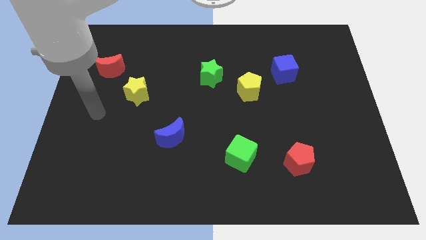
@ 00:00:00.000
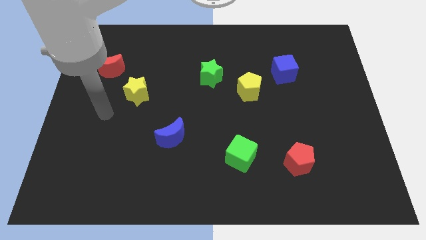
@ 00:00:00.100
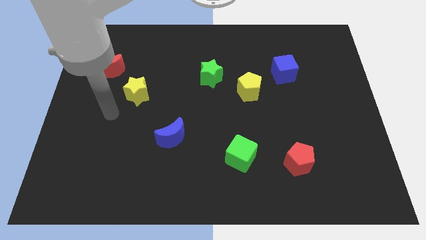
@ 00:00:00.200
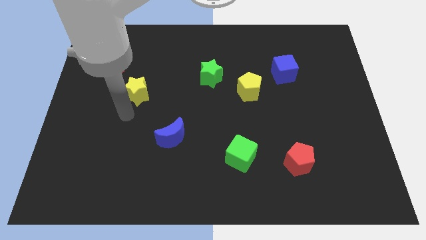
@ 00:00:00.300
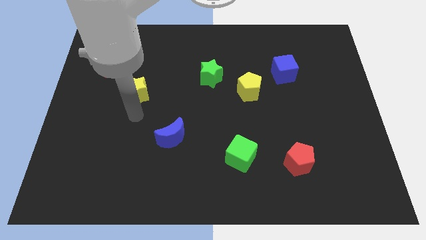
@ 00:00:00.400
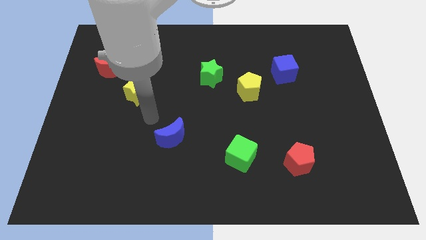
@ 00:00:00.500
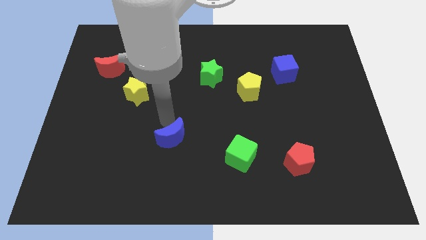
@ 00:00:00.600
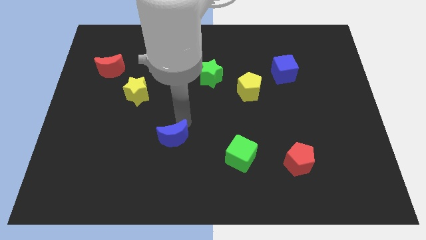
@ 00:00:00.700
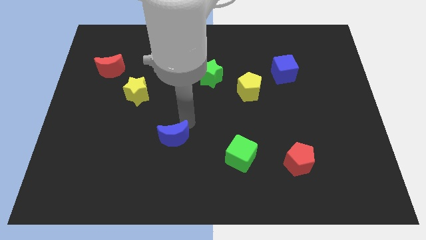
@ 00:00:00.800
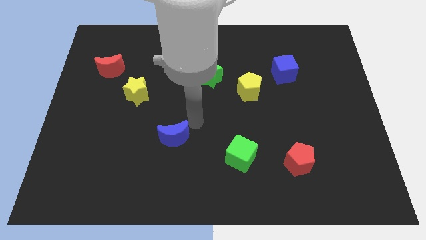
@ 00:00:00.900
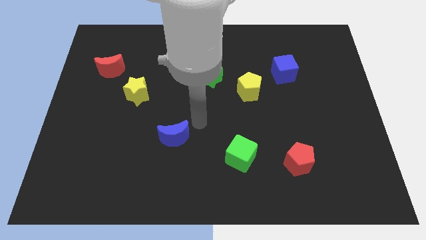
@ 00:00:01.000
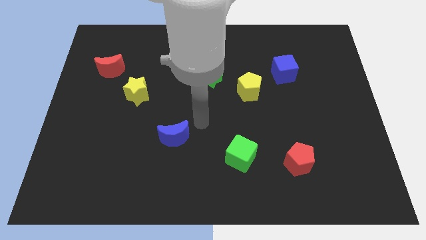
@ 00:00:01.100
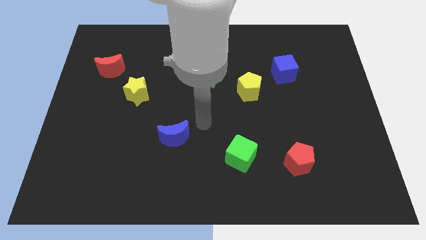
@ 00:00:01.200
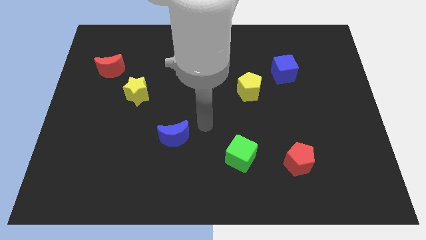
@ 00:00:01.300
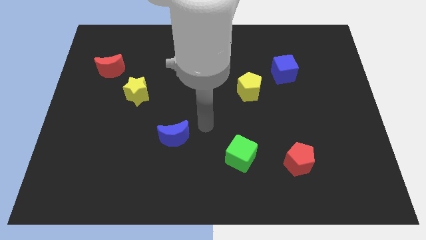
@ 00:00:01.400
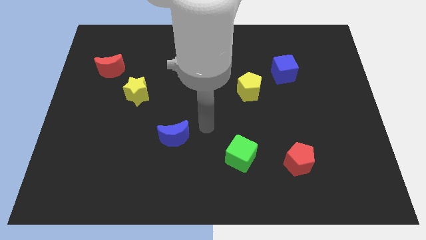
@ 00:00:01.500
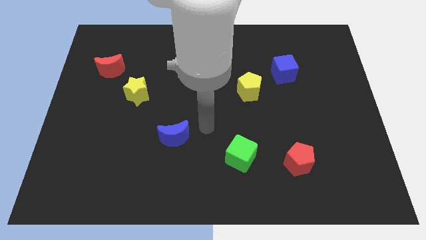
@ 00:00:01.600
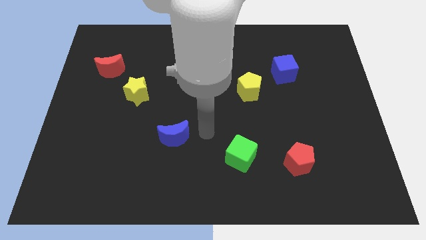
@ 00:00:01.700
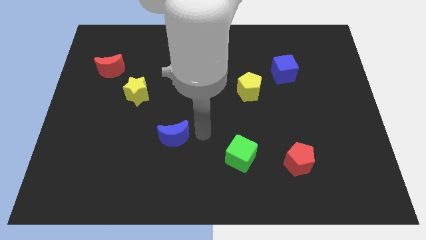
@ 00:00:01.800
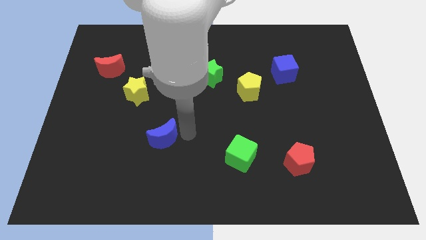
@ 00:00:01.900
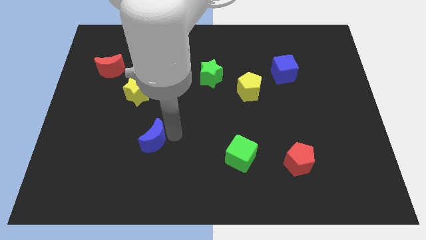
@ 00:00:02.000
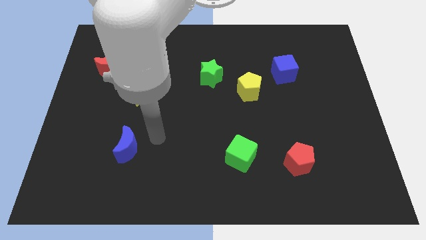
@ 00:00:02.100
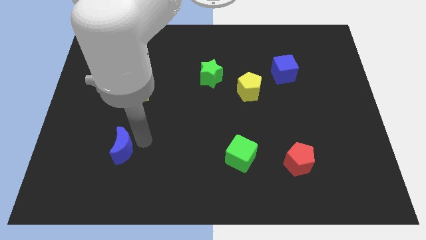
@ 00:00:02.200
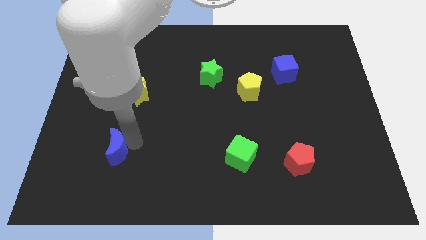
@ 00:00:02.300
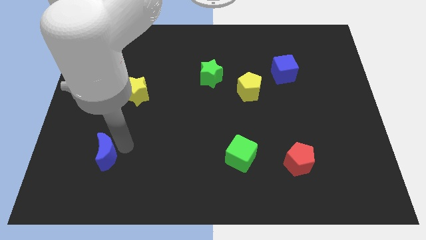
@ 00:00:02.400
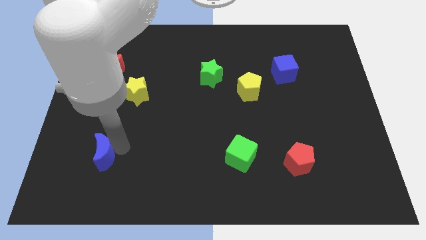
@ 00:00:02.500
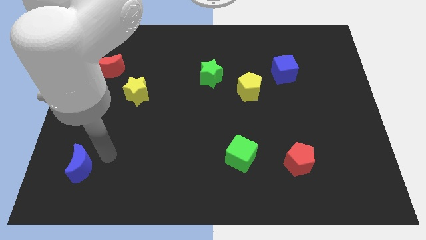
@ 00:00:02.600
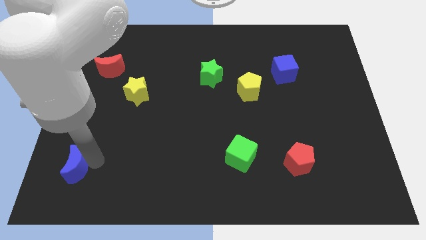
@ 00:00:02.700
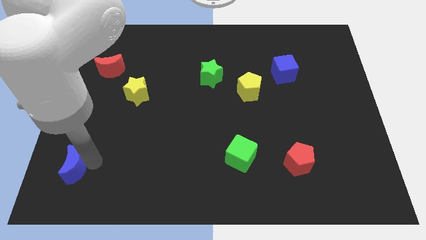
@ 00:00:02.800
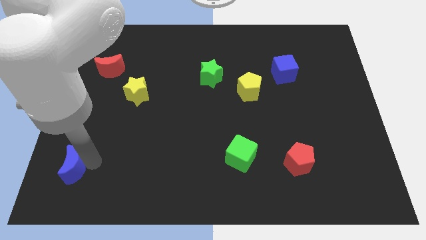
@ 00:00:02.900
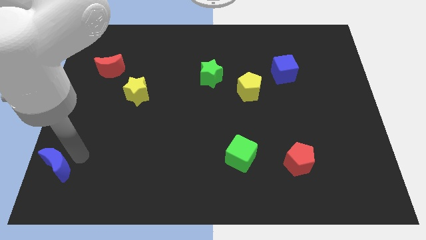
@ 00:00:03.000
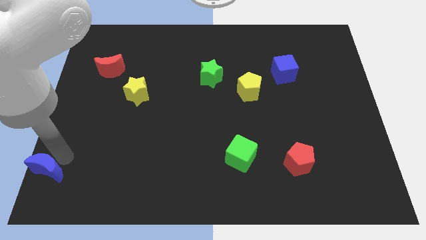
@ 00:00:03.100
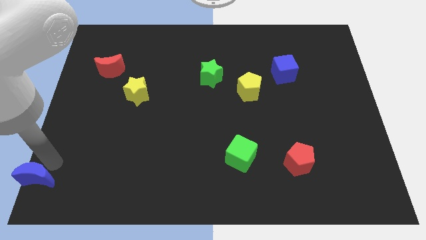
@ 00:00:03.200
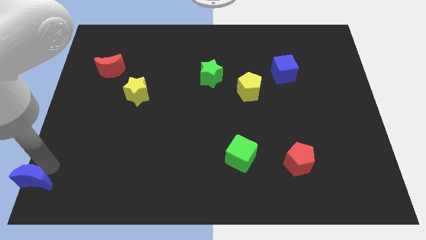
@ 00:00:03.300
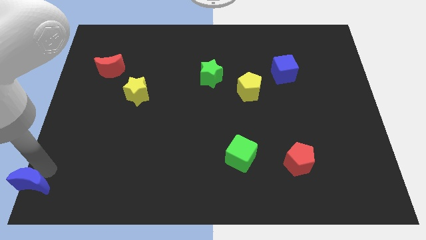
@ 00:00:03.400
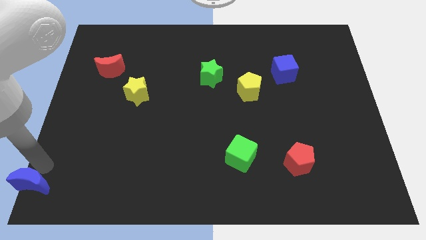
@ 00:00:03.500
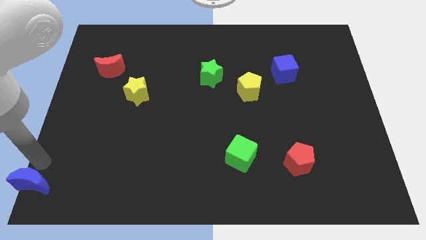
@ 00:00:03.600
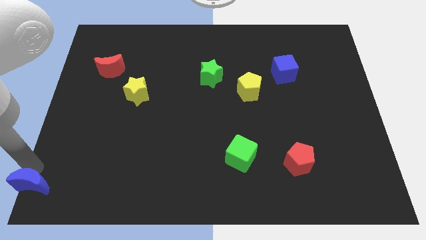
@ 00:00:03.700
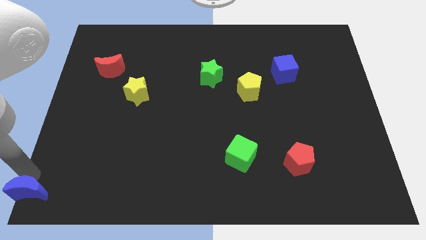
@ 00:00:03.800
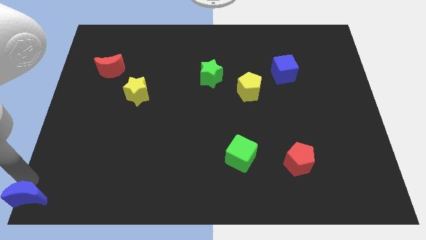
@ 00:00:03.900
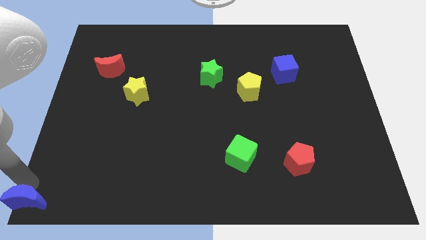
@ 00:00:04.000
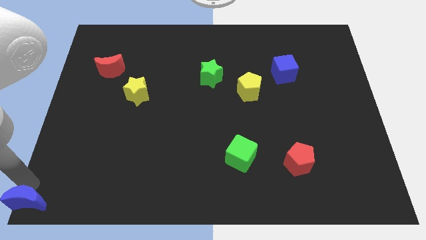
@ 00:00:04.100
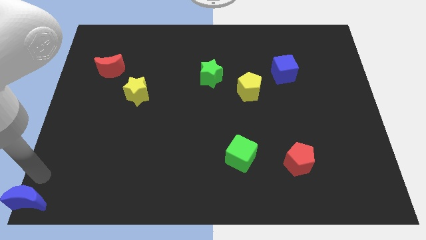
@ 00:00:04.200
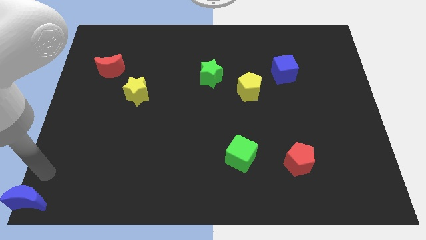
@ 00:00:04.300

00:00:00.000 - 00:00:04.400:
push the blue crescent to the bottom left corner of the board

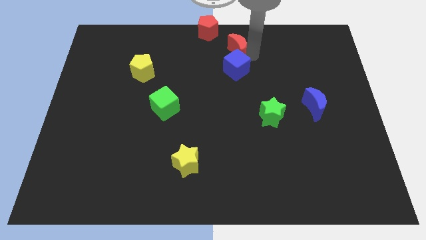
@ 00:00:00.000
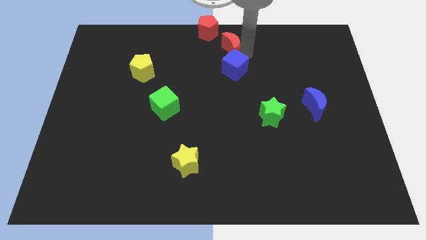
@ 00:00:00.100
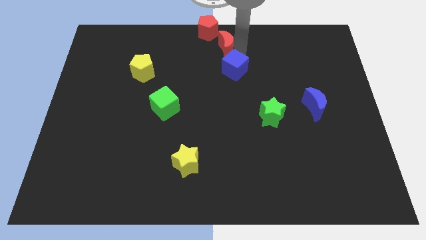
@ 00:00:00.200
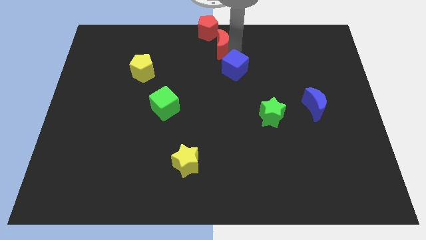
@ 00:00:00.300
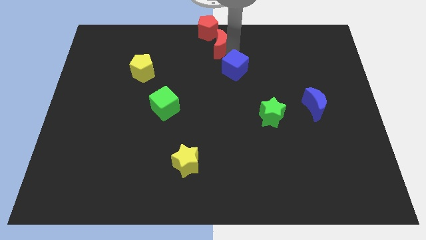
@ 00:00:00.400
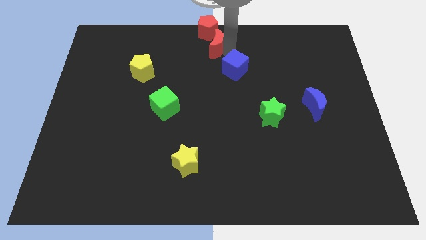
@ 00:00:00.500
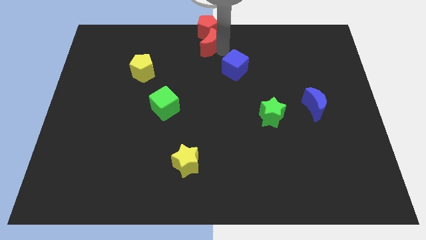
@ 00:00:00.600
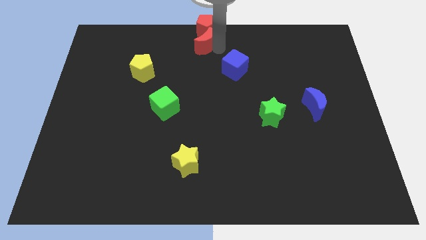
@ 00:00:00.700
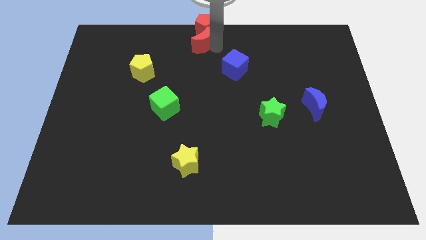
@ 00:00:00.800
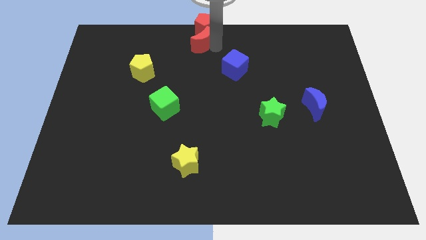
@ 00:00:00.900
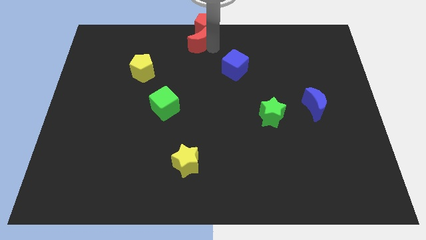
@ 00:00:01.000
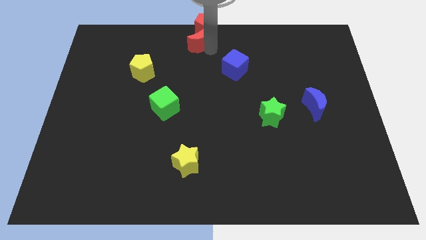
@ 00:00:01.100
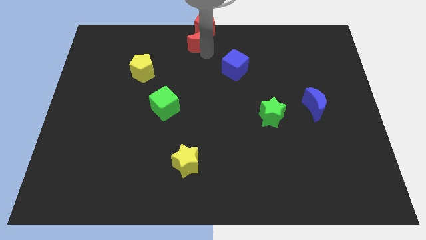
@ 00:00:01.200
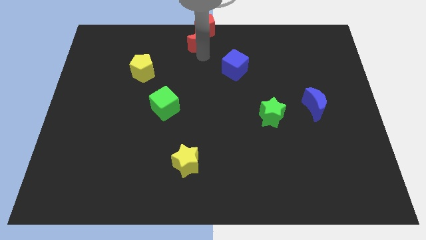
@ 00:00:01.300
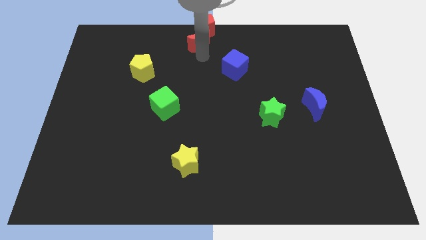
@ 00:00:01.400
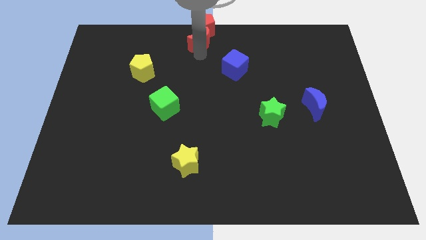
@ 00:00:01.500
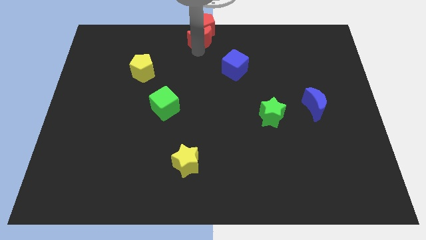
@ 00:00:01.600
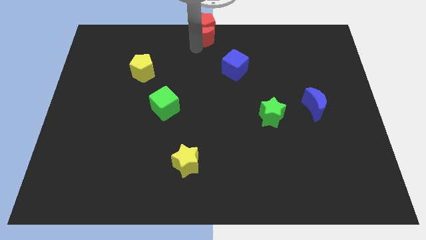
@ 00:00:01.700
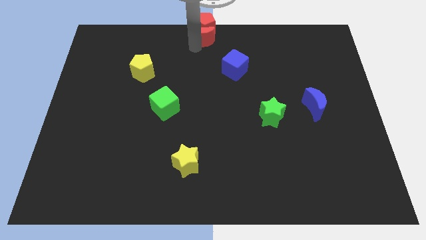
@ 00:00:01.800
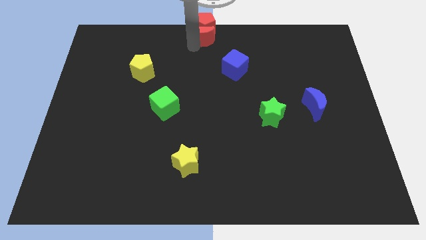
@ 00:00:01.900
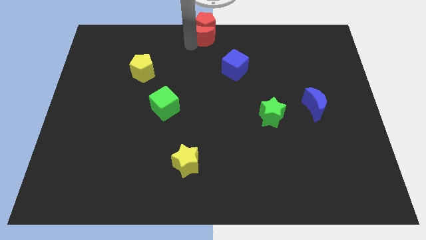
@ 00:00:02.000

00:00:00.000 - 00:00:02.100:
push the red moon into the red pentagon

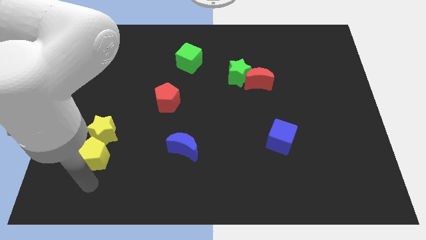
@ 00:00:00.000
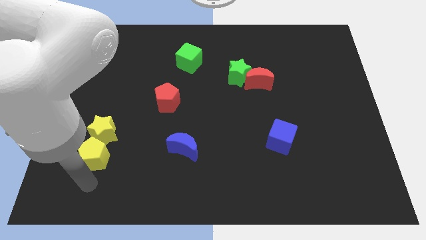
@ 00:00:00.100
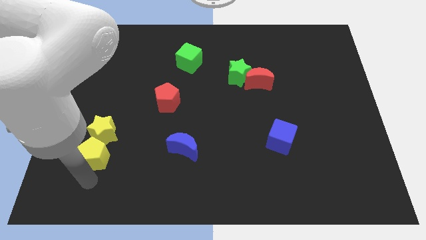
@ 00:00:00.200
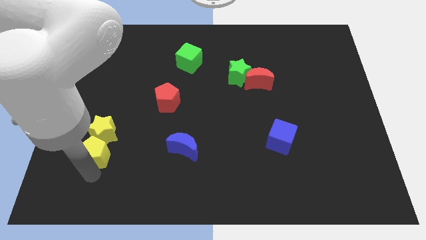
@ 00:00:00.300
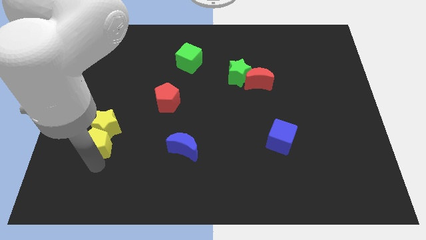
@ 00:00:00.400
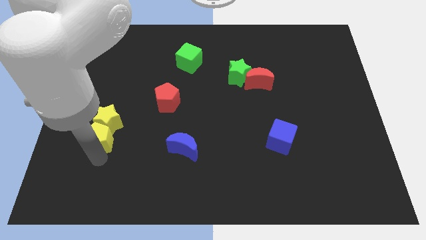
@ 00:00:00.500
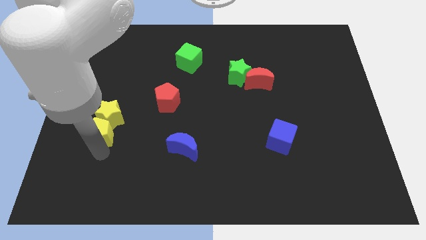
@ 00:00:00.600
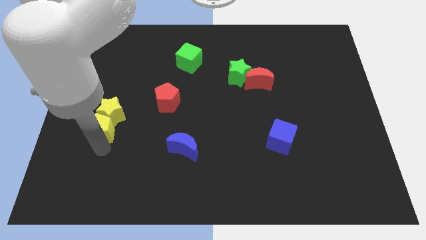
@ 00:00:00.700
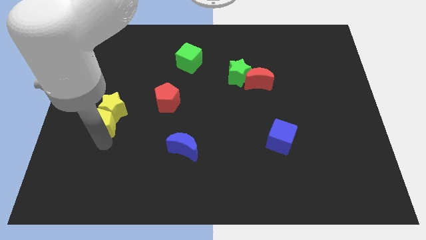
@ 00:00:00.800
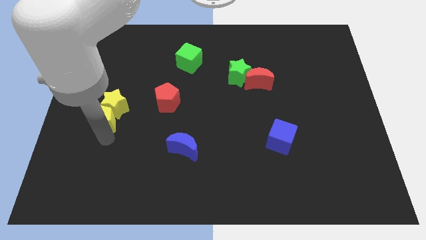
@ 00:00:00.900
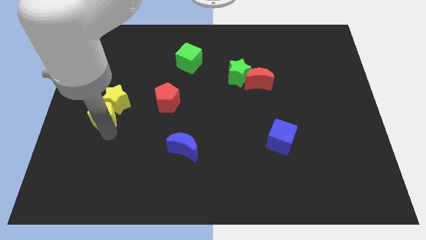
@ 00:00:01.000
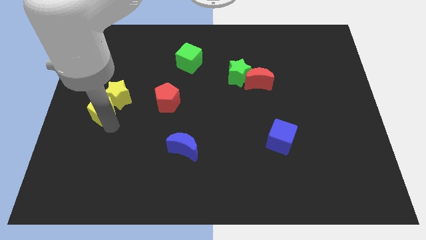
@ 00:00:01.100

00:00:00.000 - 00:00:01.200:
push the yellow star to the horizontal left side of the red pentagon with the yellow pentagon

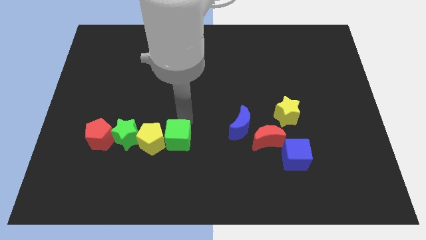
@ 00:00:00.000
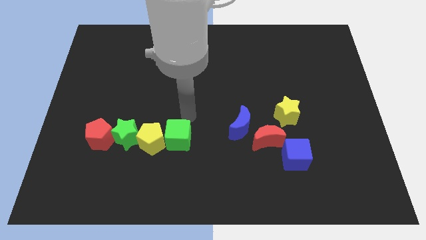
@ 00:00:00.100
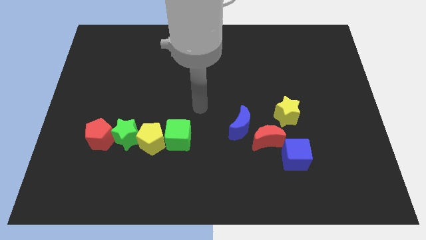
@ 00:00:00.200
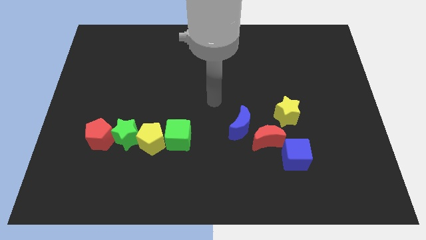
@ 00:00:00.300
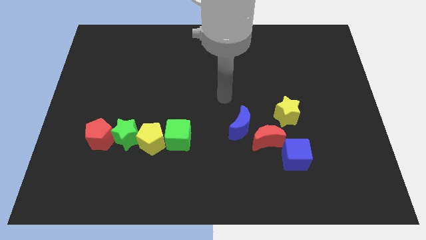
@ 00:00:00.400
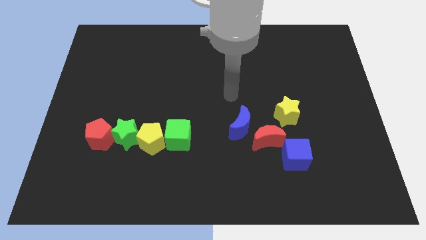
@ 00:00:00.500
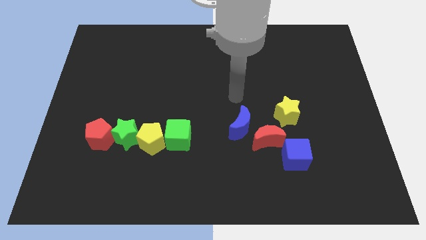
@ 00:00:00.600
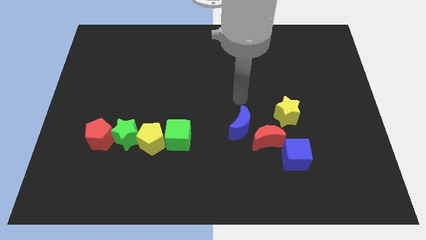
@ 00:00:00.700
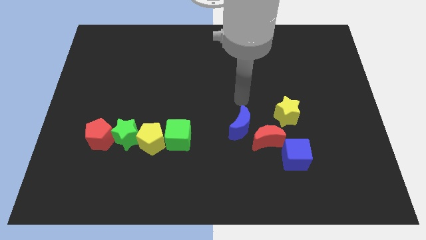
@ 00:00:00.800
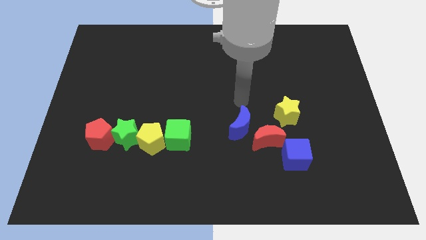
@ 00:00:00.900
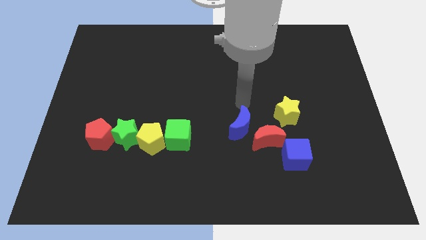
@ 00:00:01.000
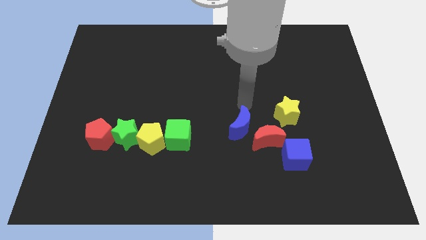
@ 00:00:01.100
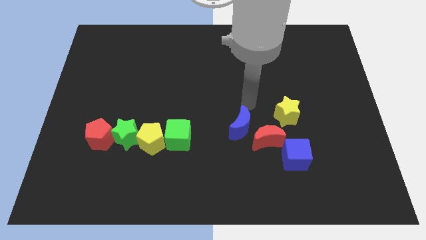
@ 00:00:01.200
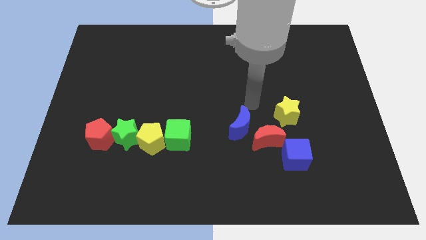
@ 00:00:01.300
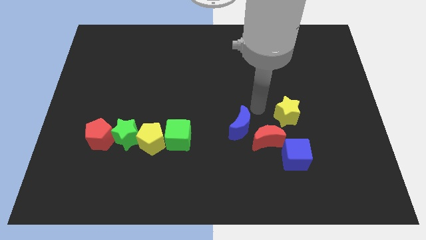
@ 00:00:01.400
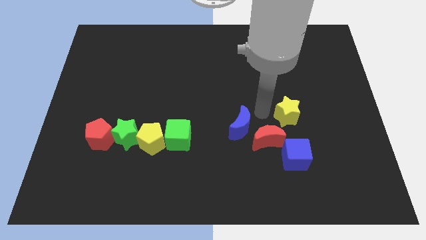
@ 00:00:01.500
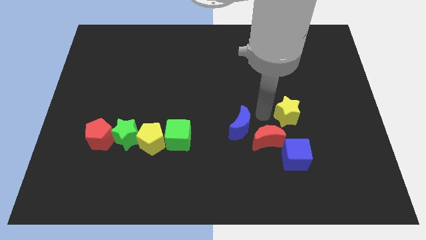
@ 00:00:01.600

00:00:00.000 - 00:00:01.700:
place your arm in between the yellow star and blue moon
